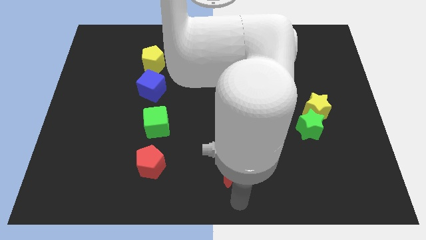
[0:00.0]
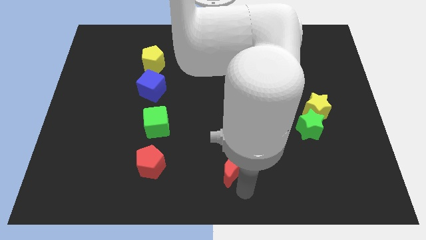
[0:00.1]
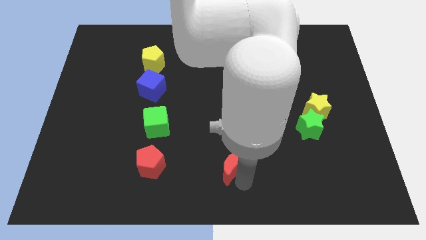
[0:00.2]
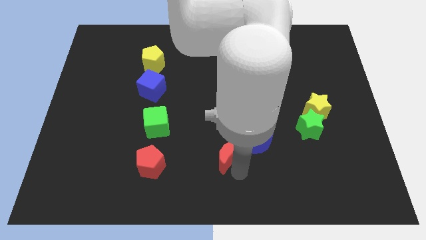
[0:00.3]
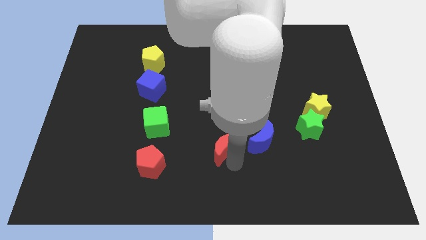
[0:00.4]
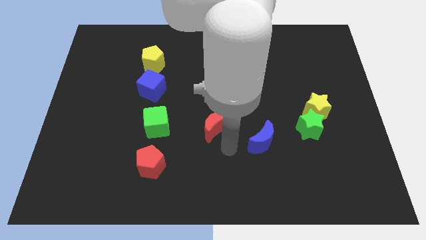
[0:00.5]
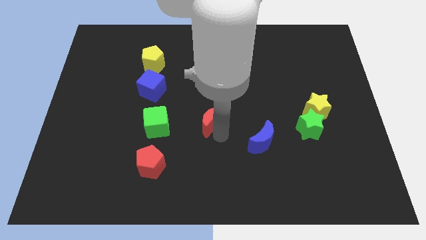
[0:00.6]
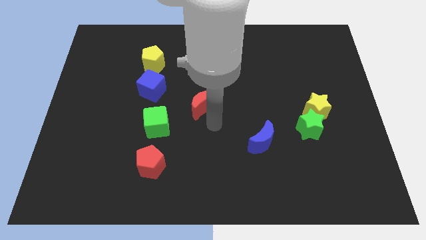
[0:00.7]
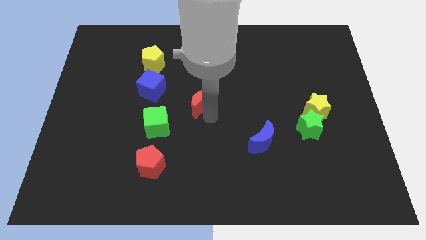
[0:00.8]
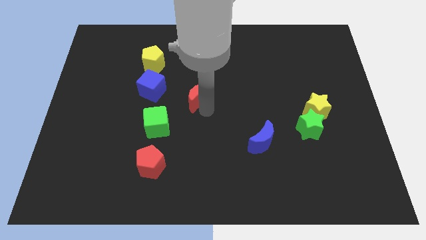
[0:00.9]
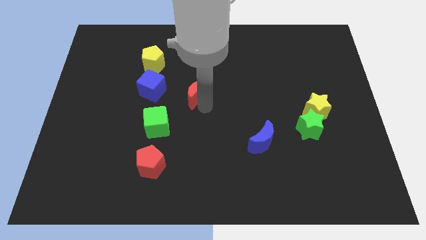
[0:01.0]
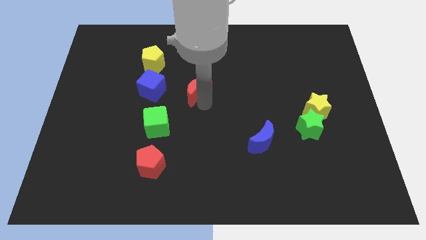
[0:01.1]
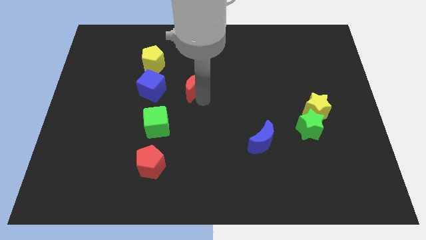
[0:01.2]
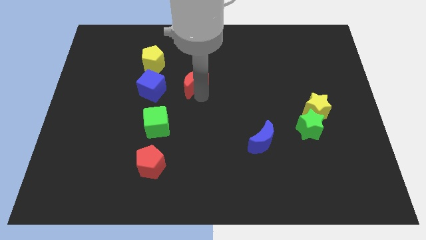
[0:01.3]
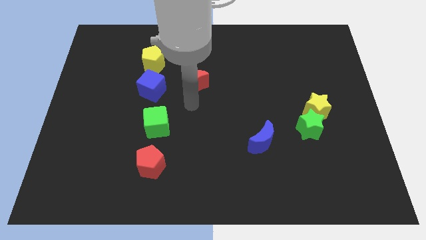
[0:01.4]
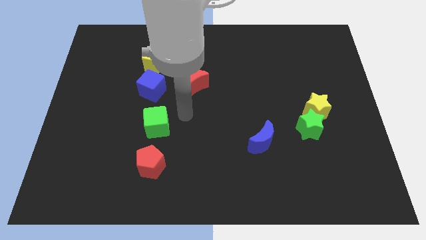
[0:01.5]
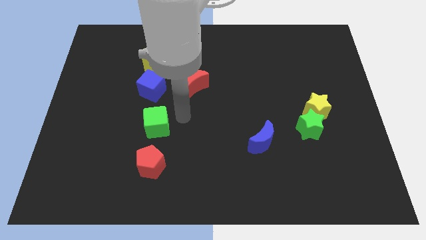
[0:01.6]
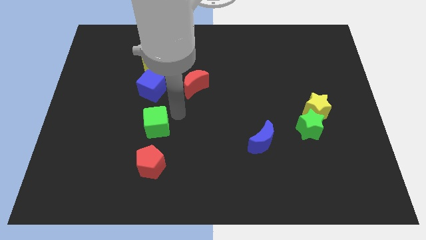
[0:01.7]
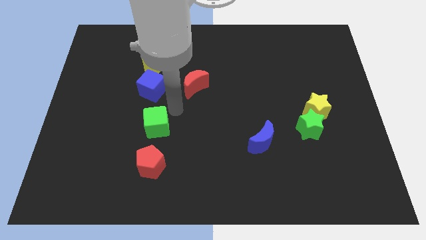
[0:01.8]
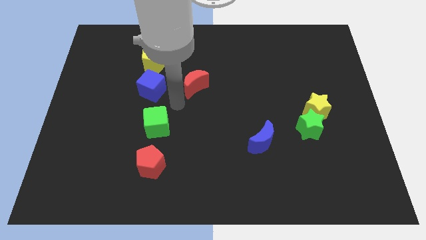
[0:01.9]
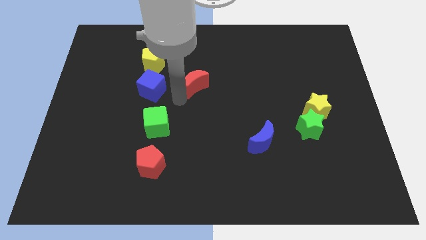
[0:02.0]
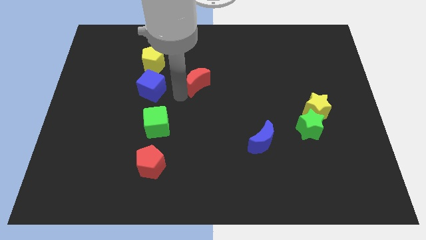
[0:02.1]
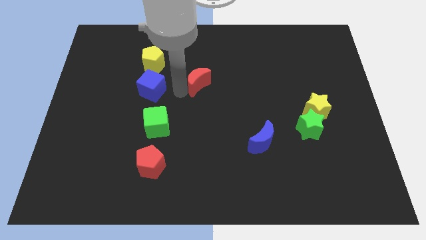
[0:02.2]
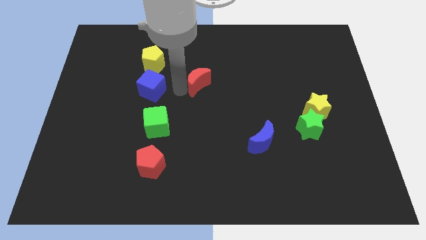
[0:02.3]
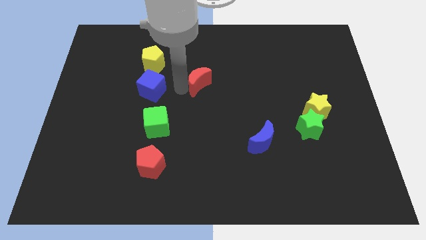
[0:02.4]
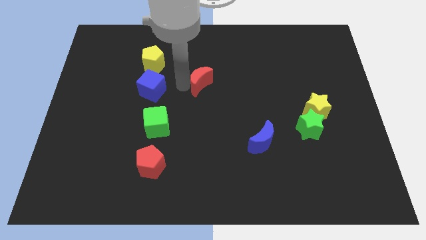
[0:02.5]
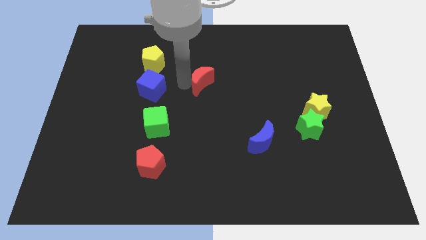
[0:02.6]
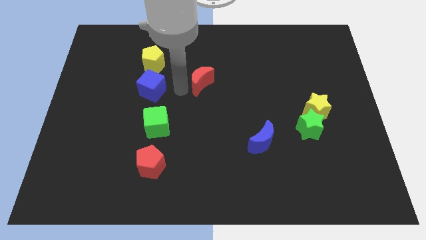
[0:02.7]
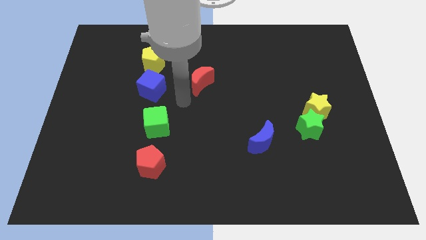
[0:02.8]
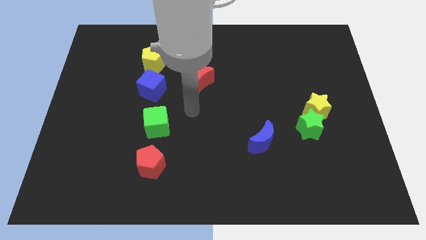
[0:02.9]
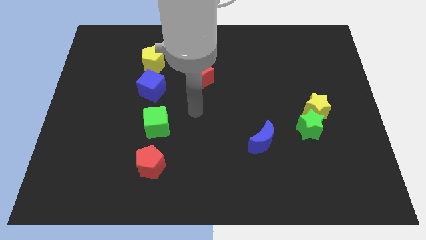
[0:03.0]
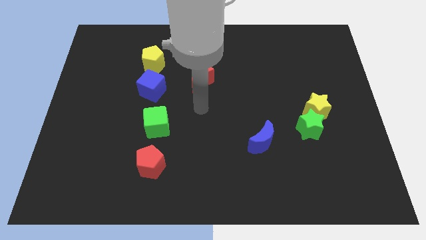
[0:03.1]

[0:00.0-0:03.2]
slide the red crescent diagonally top right to the green cube

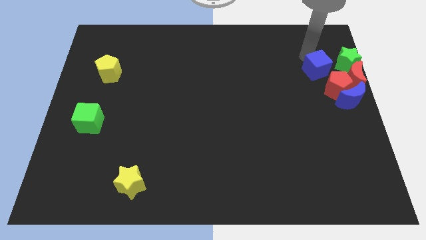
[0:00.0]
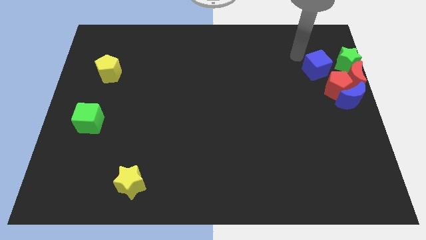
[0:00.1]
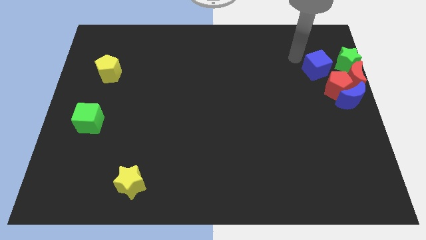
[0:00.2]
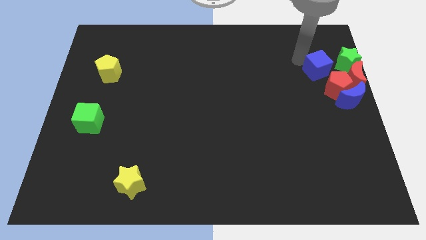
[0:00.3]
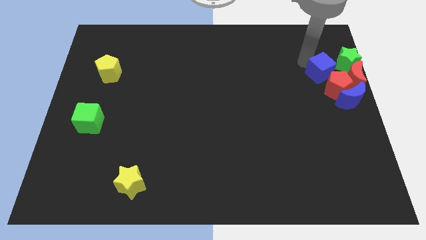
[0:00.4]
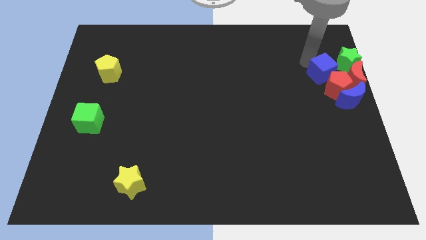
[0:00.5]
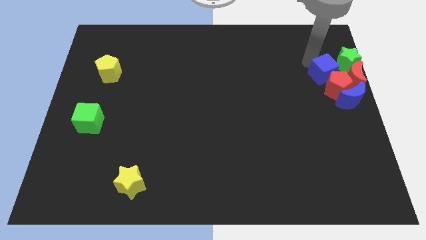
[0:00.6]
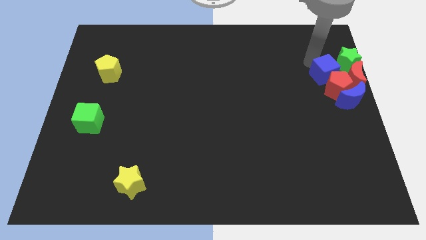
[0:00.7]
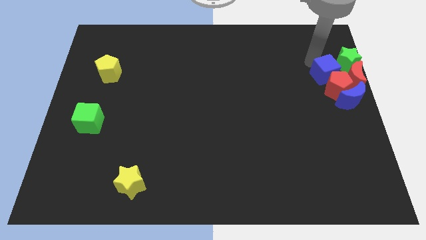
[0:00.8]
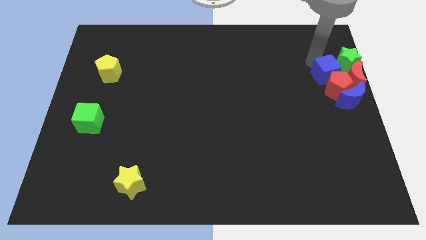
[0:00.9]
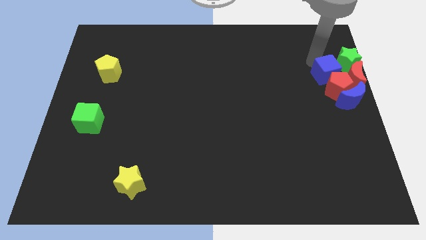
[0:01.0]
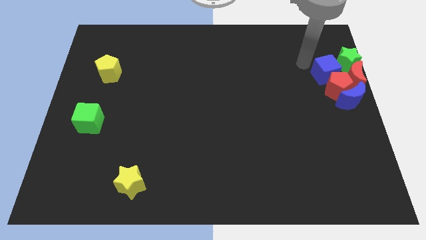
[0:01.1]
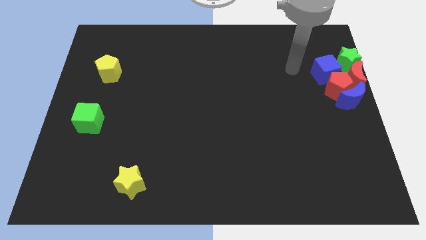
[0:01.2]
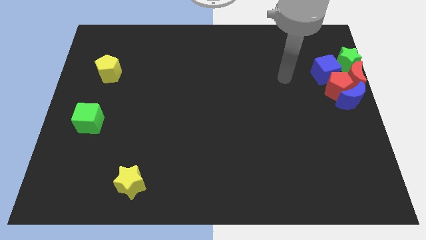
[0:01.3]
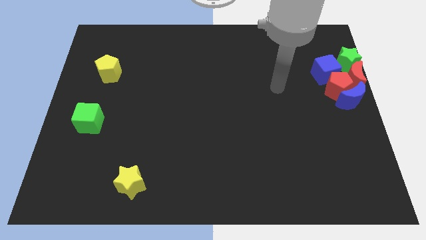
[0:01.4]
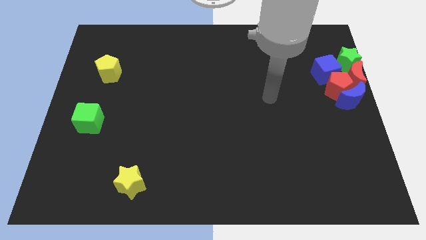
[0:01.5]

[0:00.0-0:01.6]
push the blue cube into the red pentagon from the top

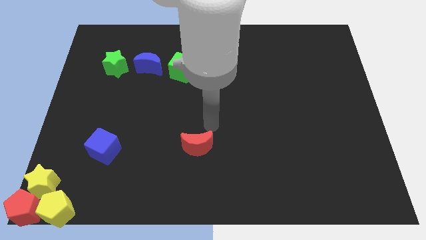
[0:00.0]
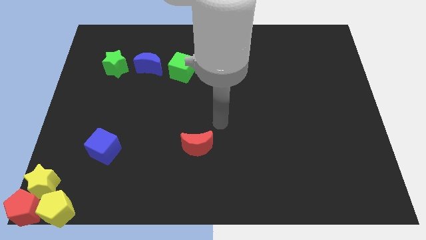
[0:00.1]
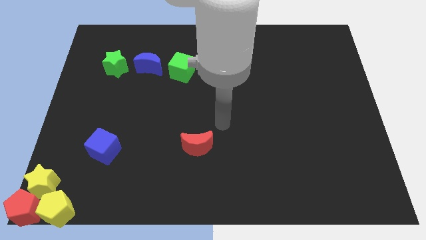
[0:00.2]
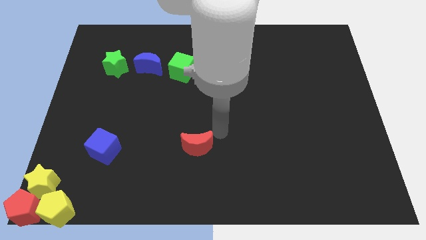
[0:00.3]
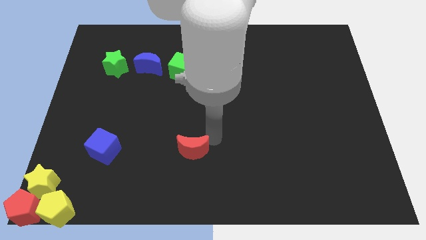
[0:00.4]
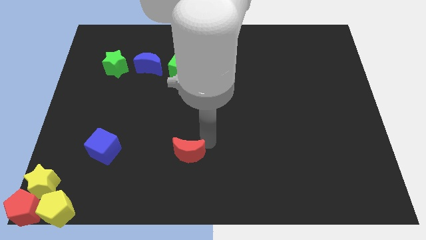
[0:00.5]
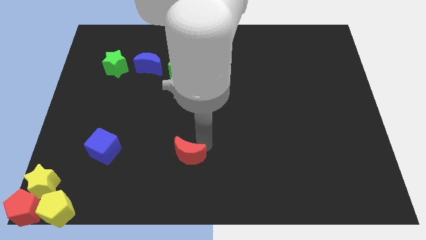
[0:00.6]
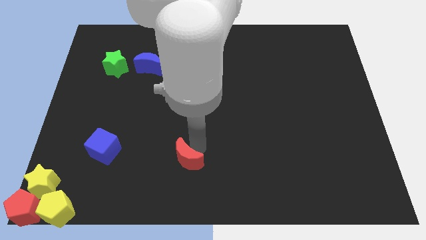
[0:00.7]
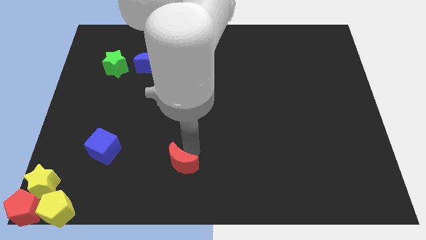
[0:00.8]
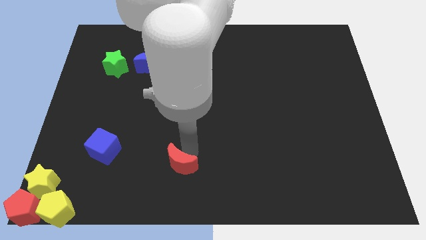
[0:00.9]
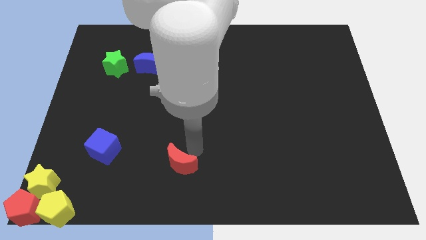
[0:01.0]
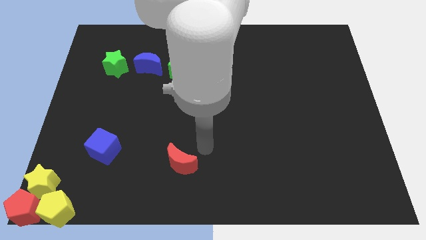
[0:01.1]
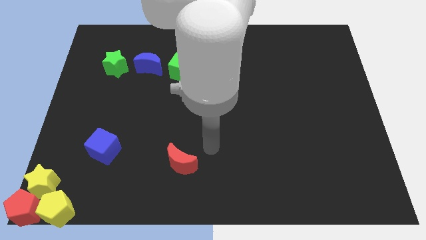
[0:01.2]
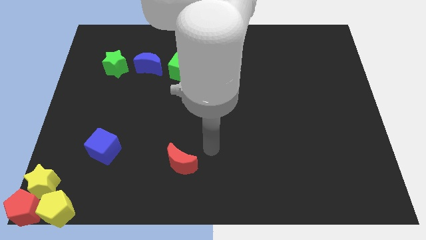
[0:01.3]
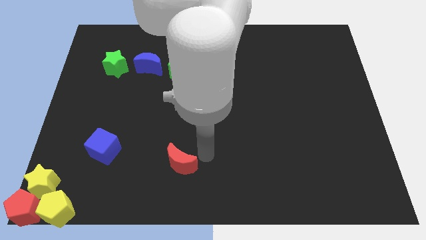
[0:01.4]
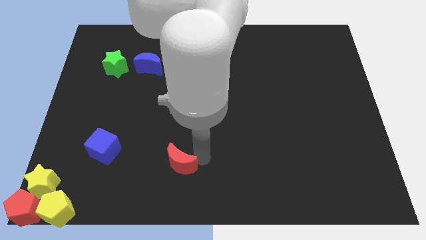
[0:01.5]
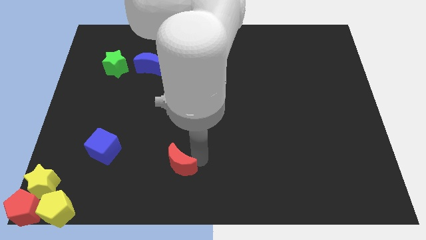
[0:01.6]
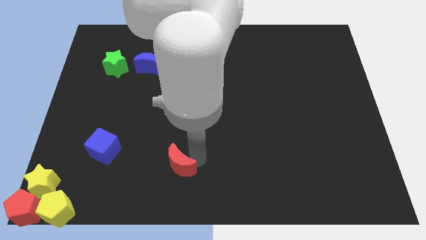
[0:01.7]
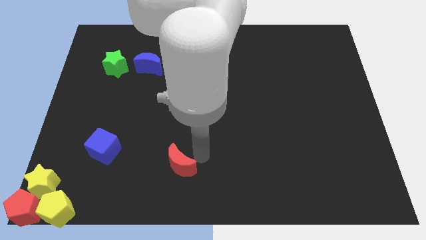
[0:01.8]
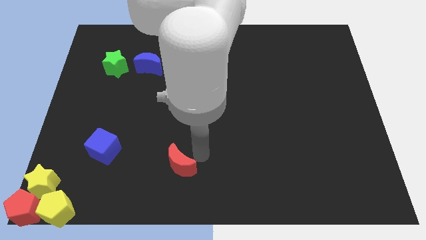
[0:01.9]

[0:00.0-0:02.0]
move the red crescent slightly downwards

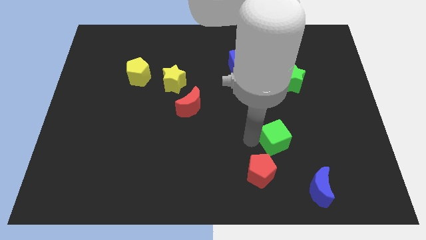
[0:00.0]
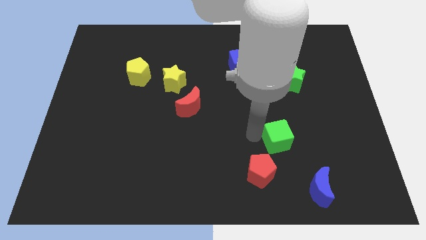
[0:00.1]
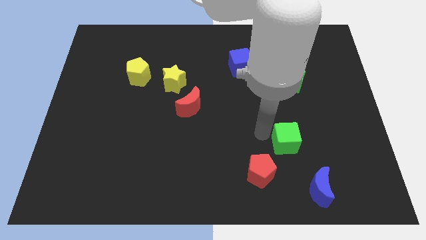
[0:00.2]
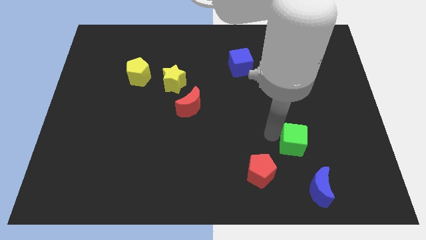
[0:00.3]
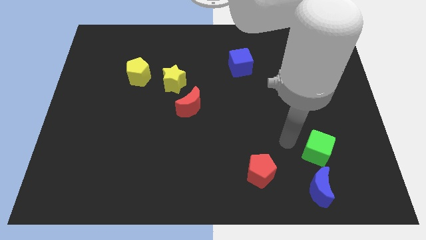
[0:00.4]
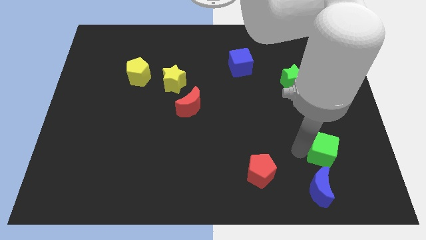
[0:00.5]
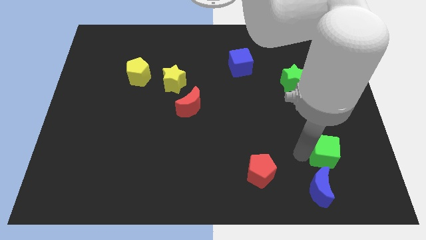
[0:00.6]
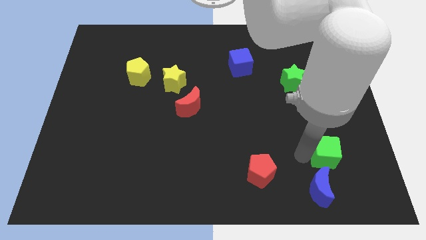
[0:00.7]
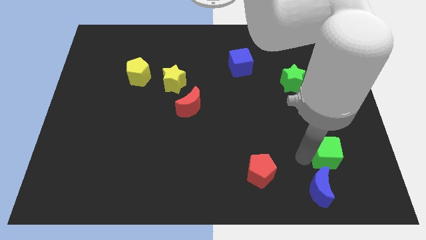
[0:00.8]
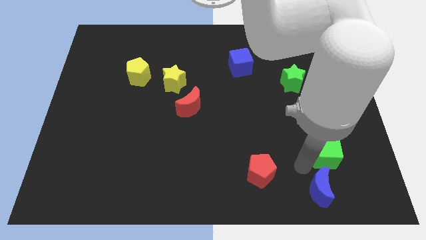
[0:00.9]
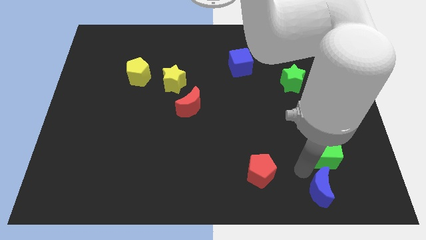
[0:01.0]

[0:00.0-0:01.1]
place green cube on the top of blue moon

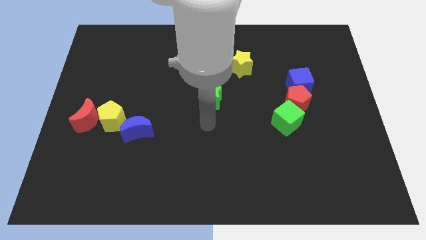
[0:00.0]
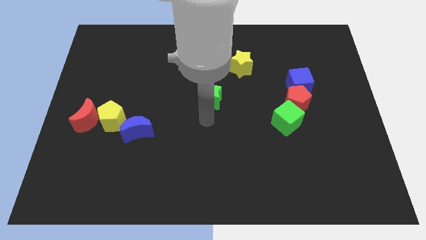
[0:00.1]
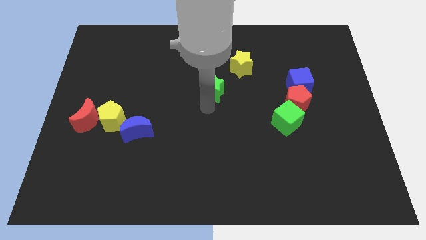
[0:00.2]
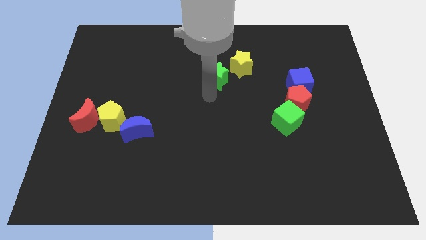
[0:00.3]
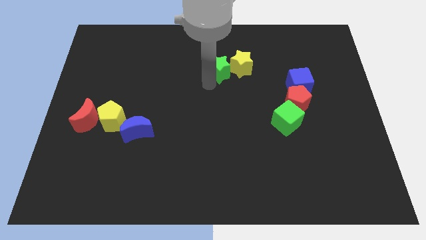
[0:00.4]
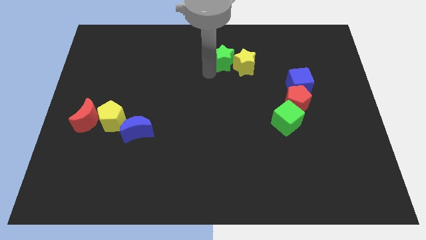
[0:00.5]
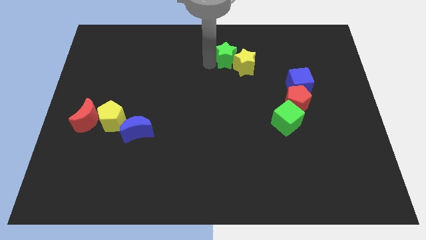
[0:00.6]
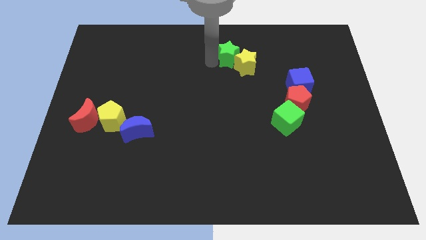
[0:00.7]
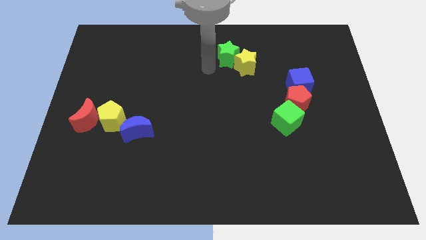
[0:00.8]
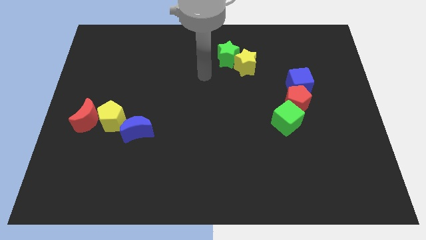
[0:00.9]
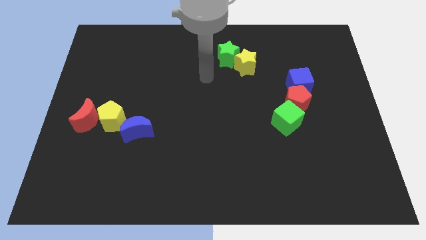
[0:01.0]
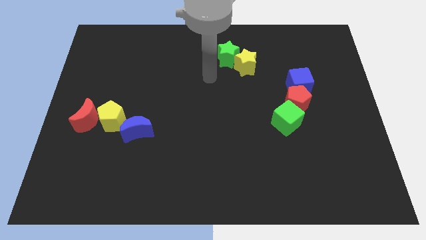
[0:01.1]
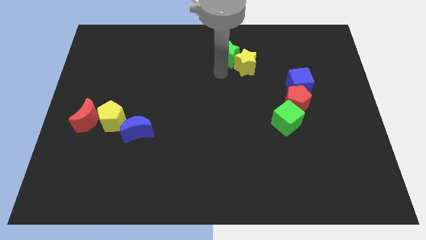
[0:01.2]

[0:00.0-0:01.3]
push the green star into the yellow star

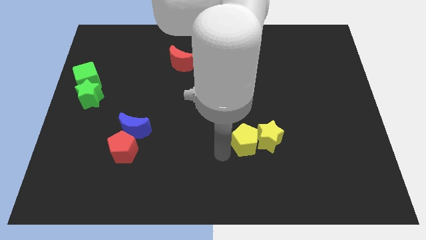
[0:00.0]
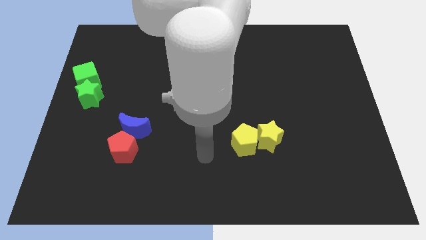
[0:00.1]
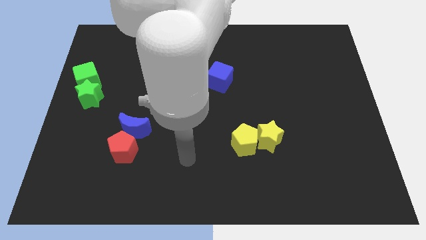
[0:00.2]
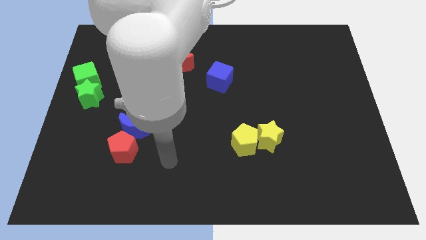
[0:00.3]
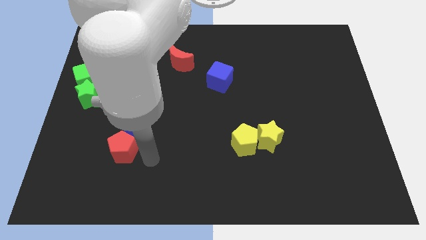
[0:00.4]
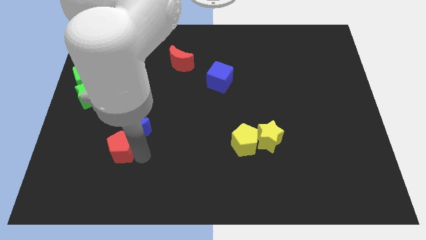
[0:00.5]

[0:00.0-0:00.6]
go away from the yellow pentagon